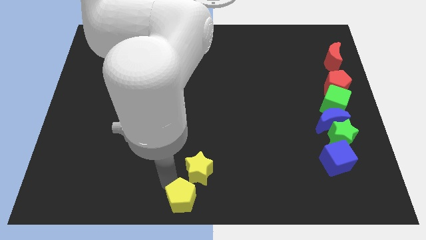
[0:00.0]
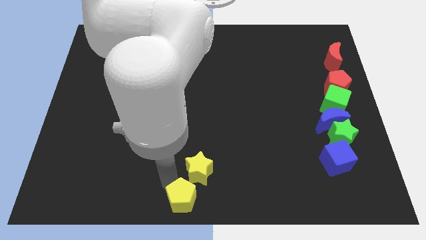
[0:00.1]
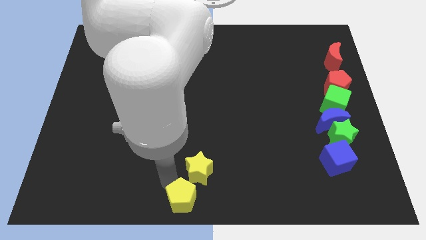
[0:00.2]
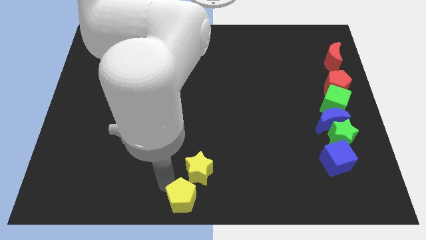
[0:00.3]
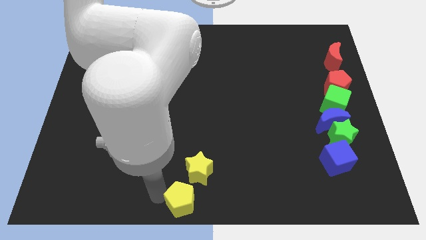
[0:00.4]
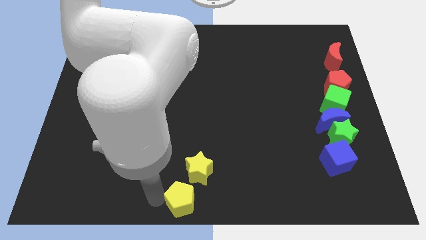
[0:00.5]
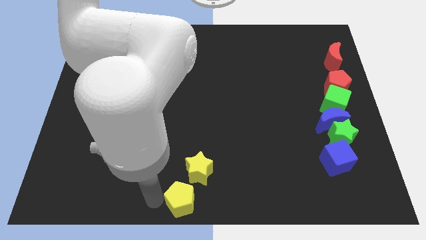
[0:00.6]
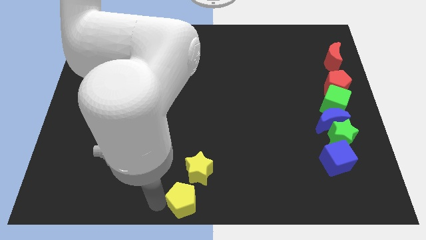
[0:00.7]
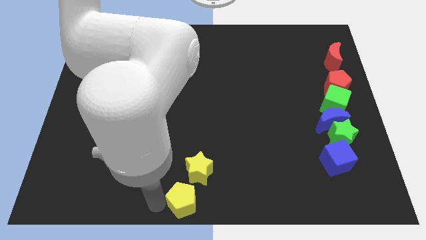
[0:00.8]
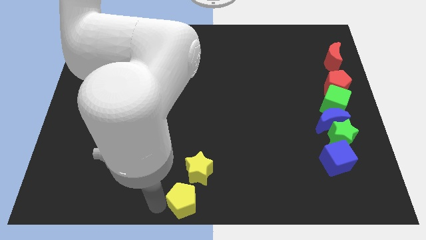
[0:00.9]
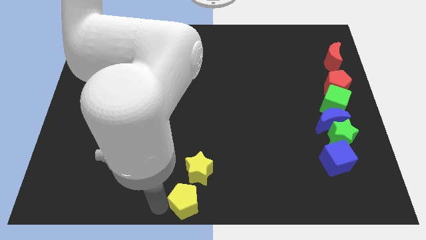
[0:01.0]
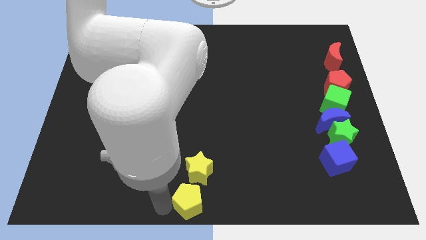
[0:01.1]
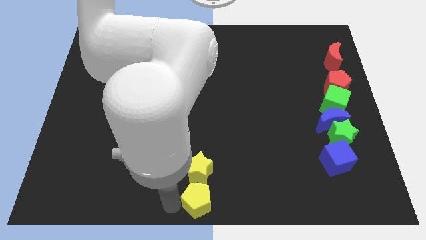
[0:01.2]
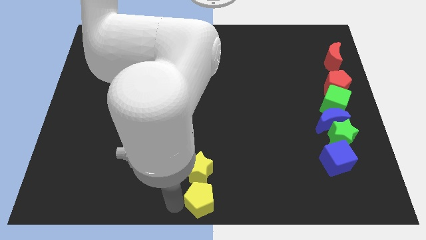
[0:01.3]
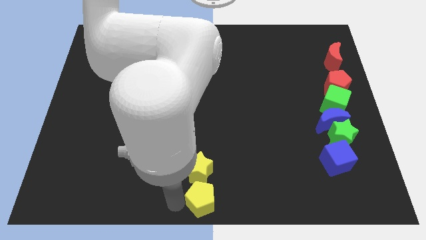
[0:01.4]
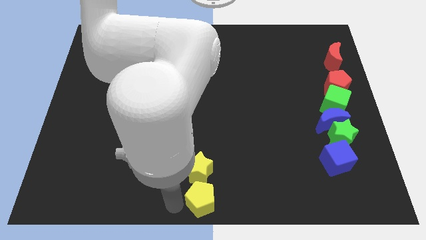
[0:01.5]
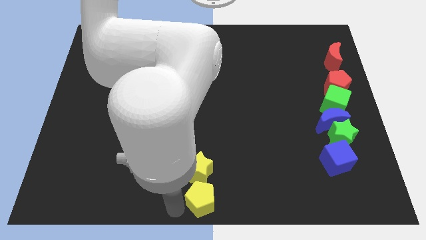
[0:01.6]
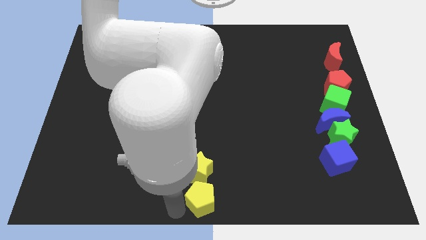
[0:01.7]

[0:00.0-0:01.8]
put the yellow pentagon underneath the yellow star

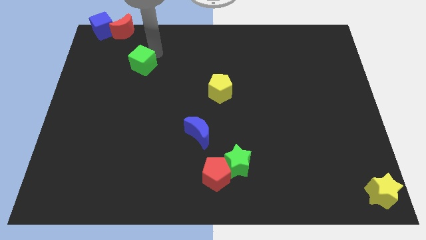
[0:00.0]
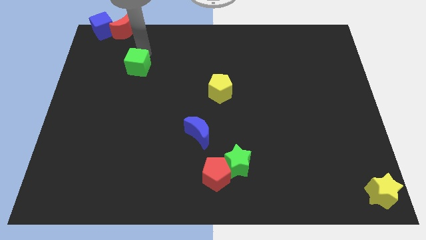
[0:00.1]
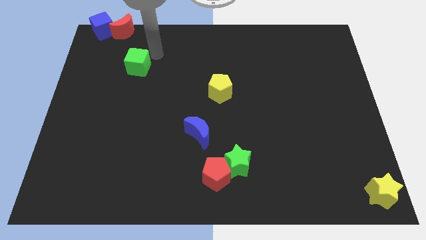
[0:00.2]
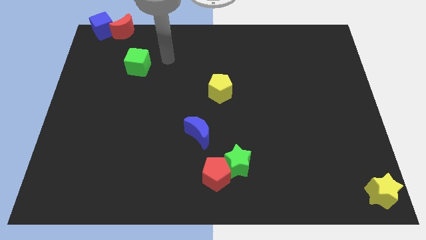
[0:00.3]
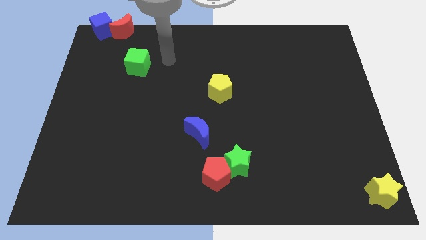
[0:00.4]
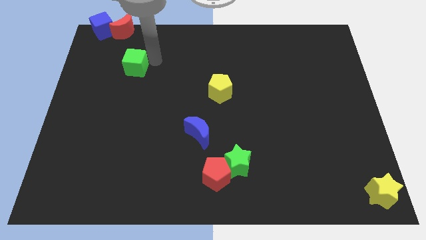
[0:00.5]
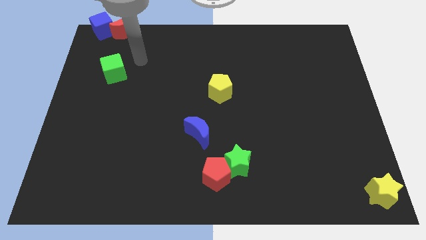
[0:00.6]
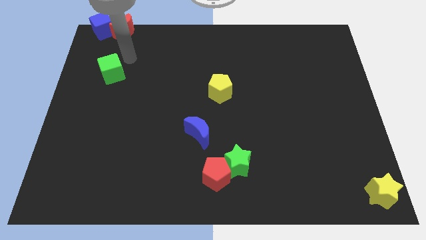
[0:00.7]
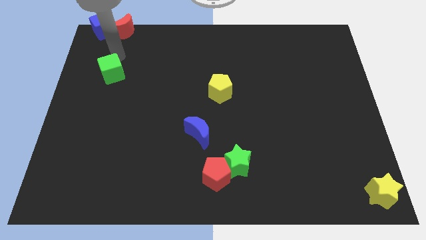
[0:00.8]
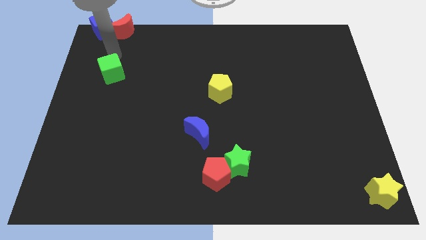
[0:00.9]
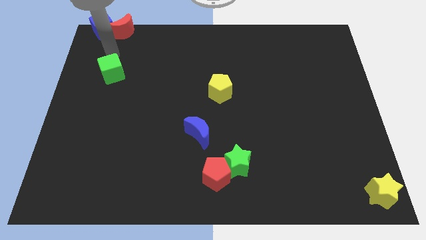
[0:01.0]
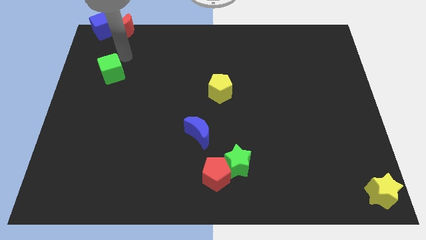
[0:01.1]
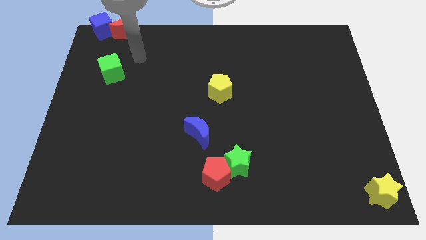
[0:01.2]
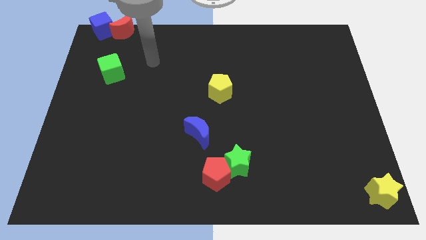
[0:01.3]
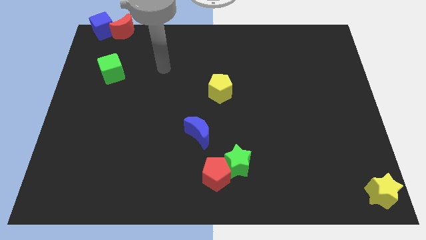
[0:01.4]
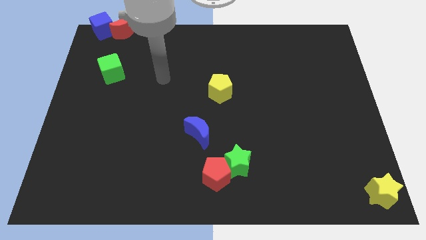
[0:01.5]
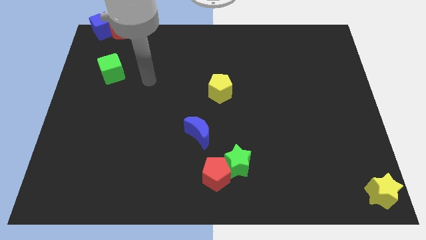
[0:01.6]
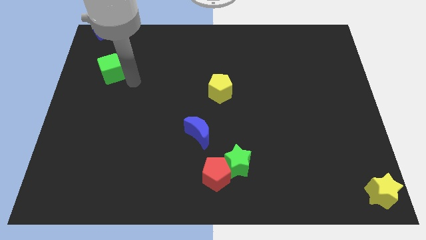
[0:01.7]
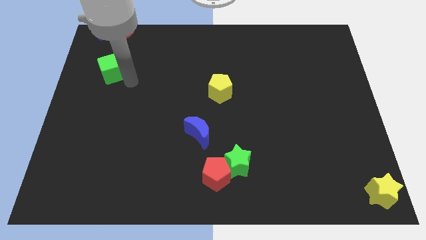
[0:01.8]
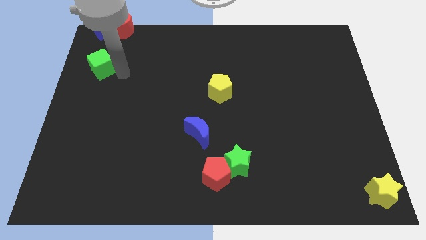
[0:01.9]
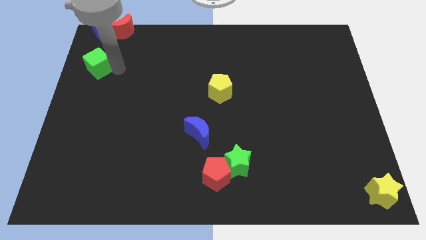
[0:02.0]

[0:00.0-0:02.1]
place the green cube below blue cube

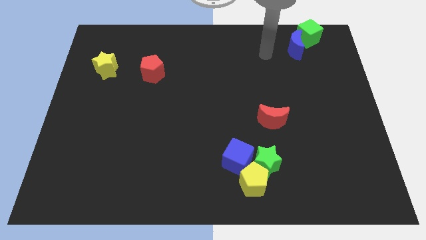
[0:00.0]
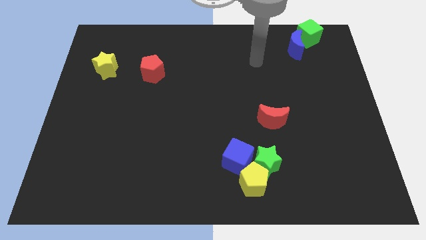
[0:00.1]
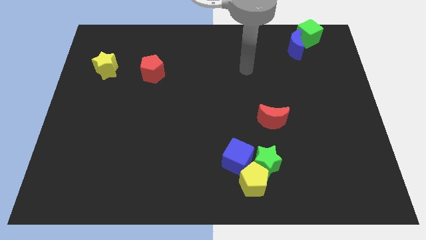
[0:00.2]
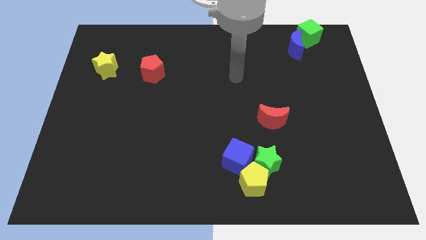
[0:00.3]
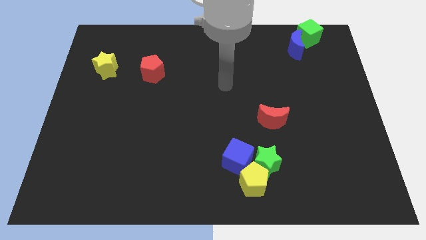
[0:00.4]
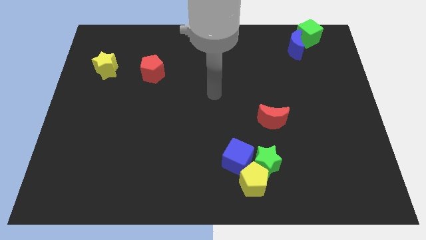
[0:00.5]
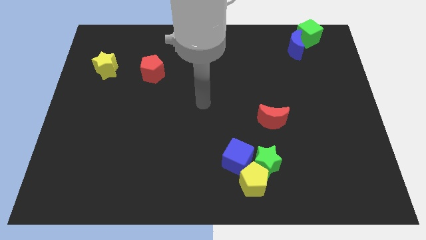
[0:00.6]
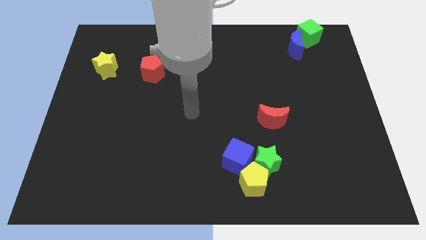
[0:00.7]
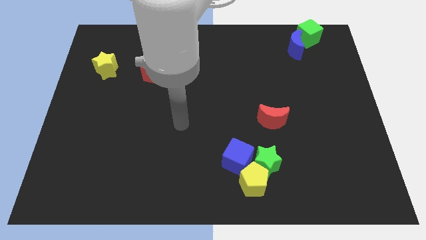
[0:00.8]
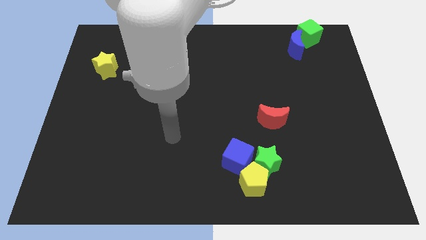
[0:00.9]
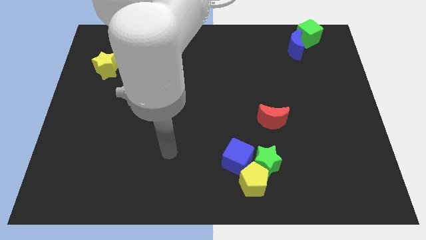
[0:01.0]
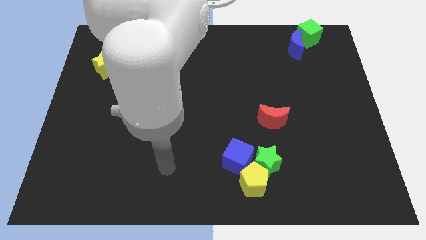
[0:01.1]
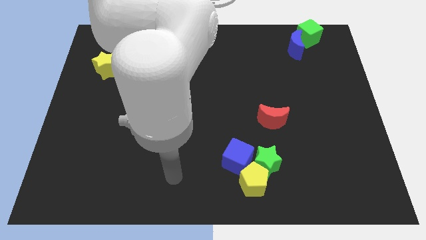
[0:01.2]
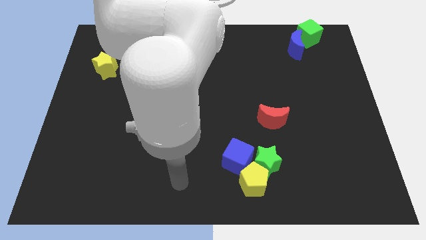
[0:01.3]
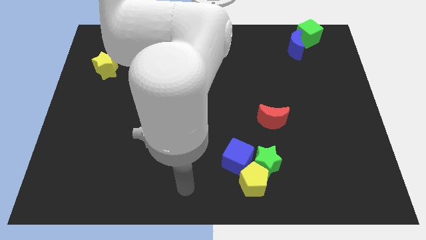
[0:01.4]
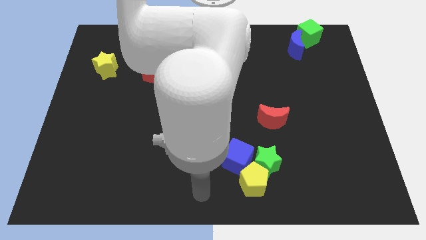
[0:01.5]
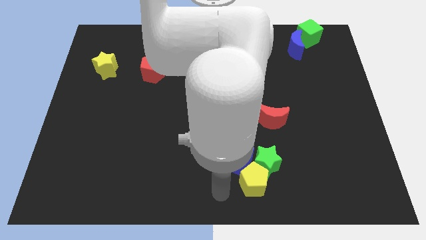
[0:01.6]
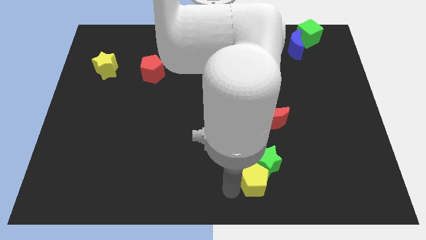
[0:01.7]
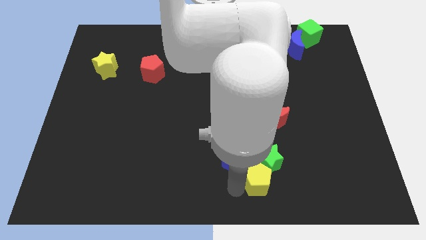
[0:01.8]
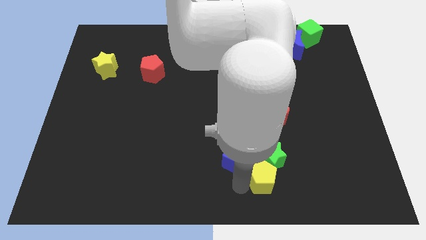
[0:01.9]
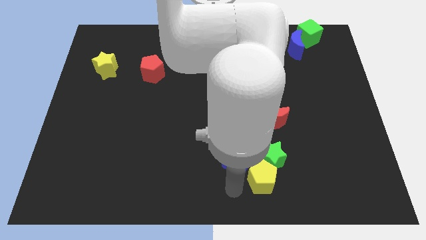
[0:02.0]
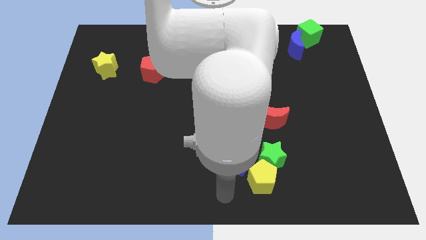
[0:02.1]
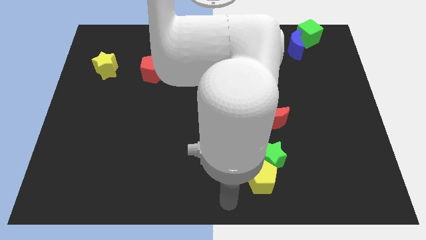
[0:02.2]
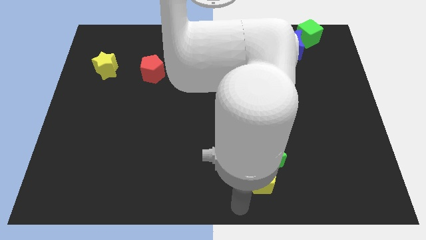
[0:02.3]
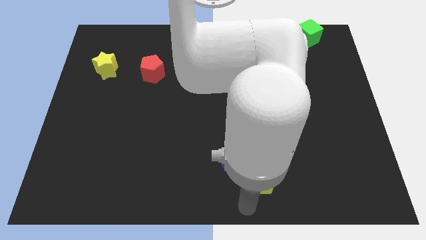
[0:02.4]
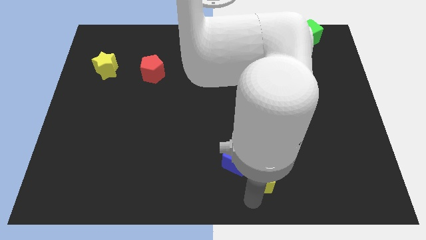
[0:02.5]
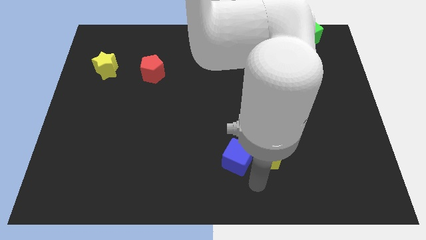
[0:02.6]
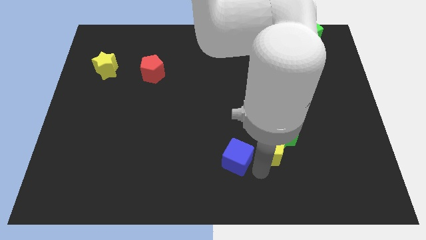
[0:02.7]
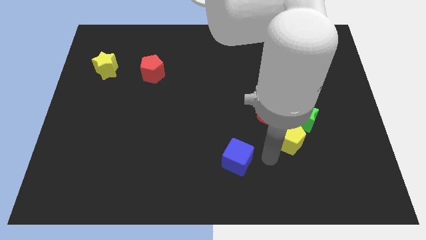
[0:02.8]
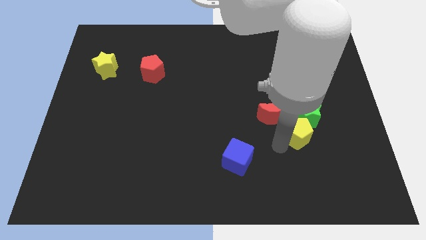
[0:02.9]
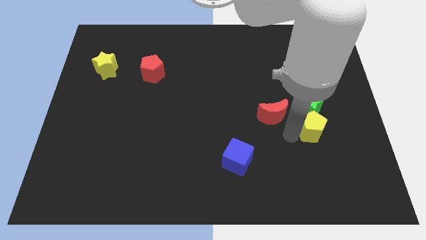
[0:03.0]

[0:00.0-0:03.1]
slightly push the yellow pentagon and green star towards red moon

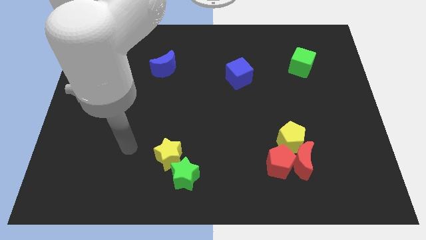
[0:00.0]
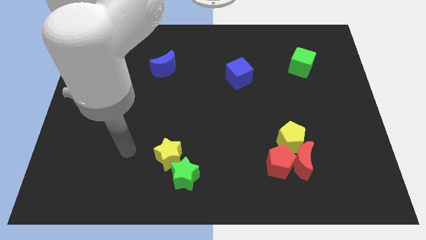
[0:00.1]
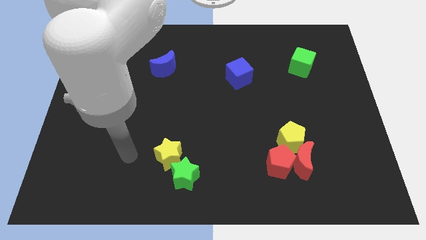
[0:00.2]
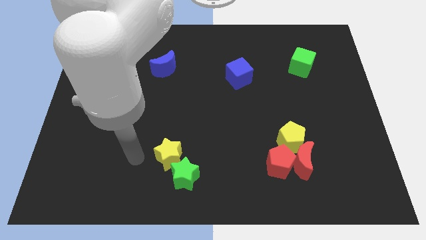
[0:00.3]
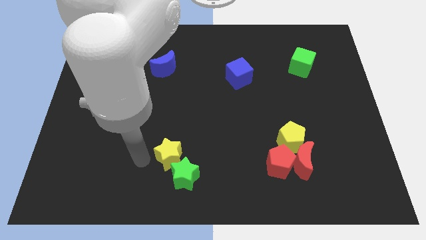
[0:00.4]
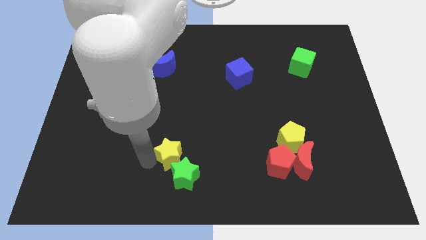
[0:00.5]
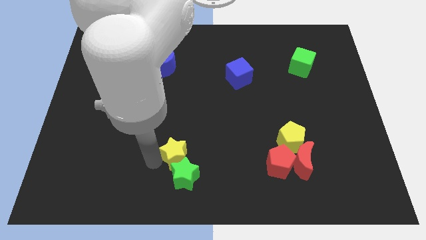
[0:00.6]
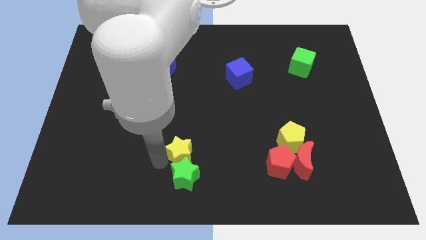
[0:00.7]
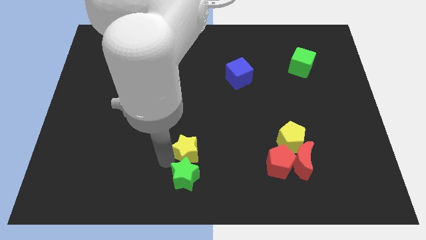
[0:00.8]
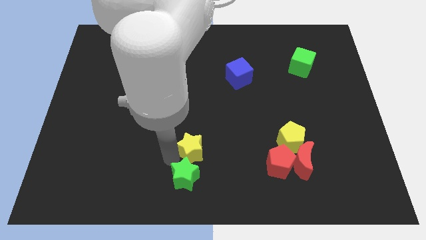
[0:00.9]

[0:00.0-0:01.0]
put the yellow star at the top of the green star

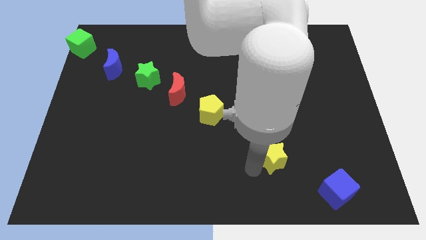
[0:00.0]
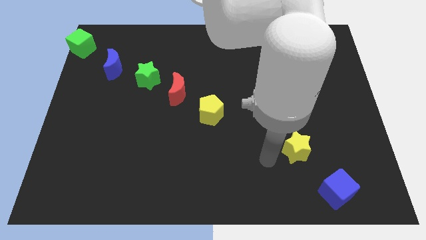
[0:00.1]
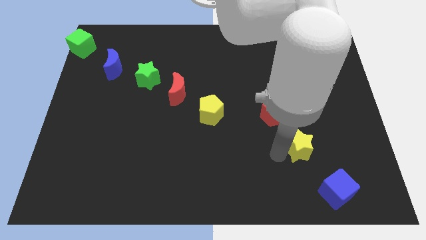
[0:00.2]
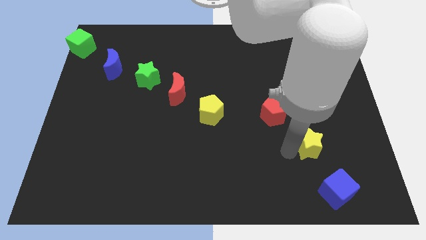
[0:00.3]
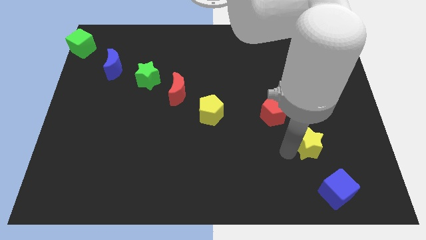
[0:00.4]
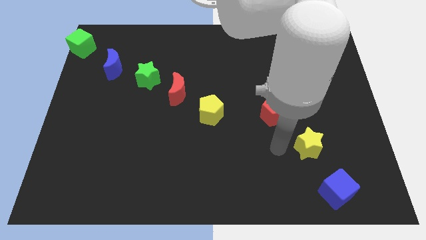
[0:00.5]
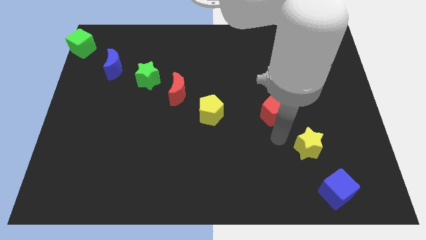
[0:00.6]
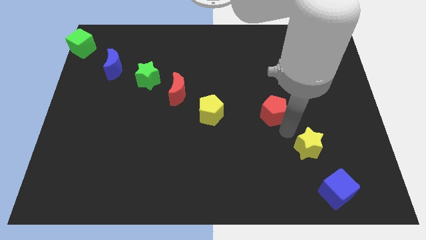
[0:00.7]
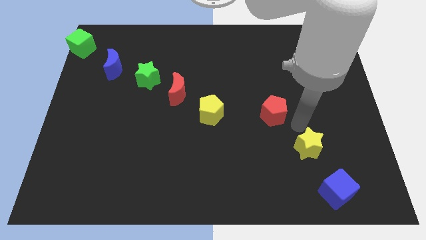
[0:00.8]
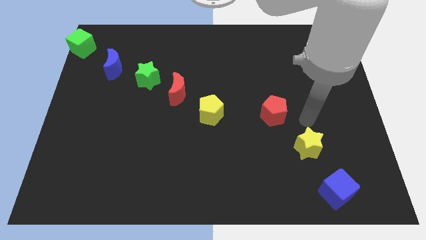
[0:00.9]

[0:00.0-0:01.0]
push the yellow star top of blue cube

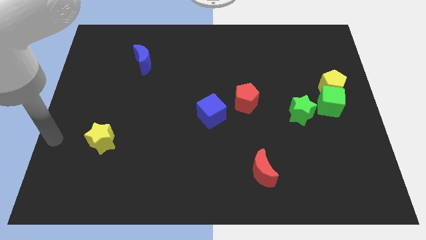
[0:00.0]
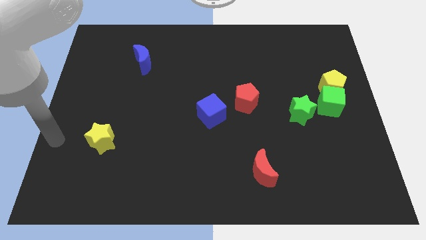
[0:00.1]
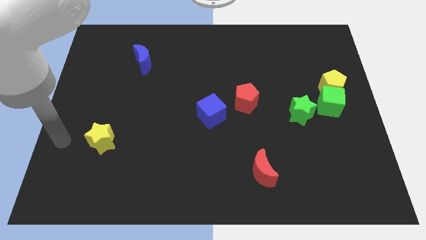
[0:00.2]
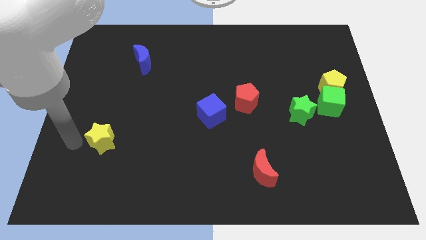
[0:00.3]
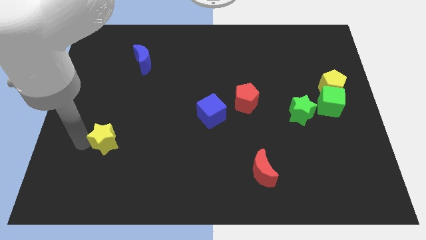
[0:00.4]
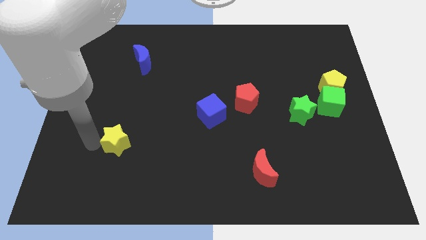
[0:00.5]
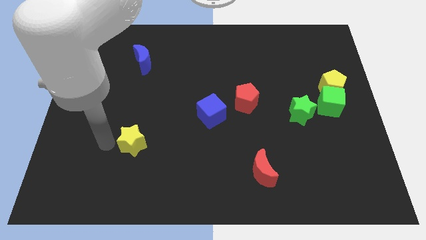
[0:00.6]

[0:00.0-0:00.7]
push the yellow star slightly to the right of the board
